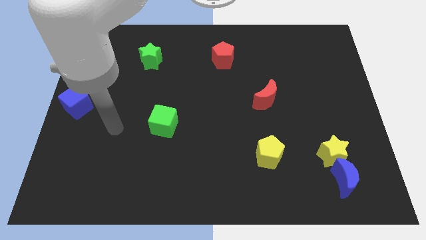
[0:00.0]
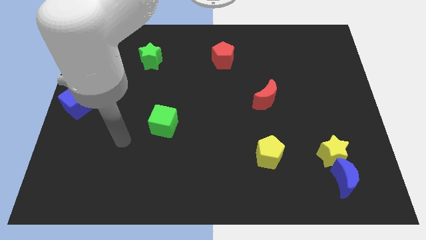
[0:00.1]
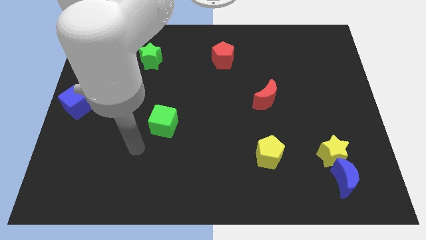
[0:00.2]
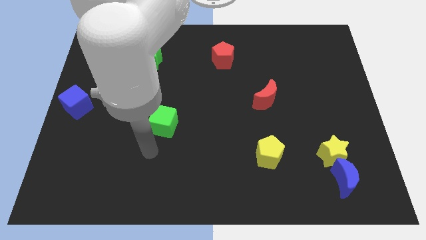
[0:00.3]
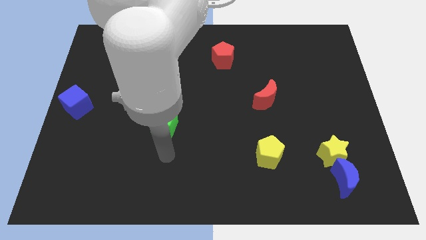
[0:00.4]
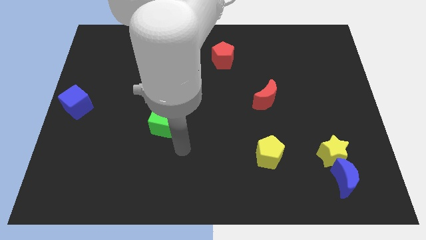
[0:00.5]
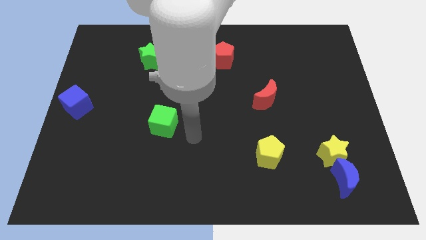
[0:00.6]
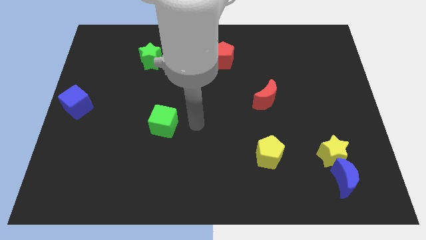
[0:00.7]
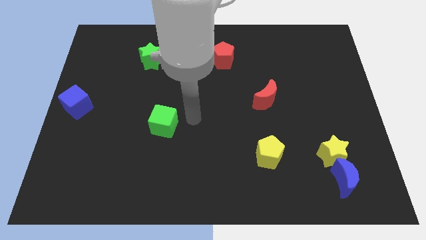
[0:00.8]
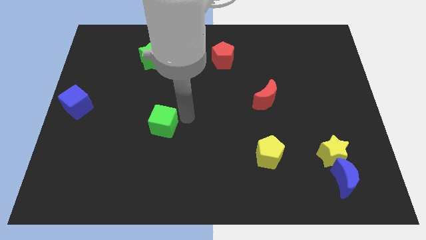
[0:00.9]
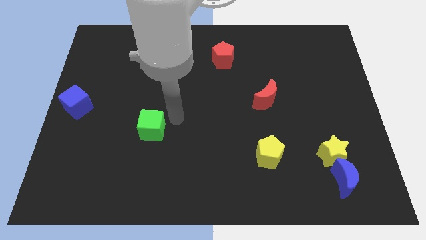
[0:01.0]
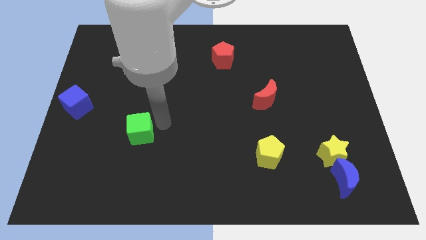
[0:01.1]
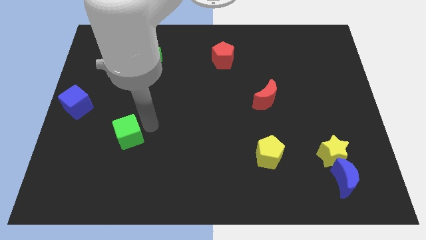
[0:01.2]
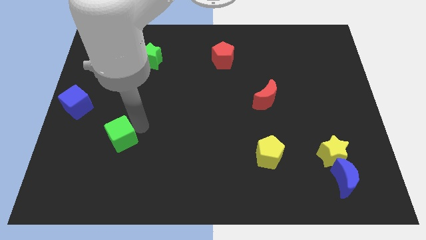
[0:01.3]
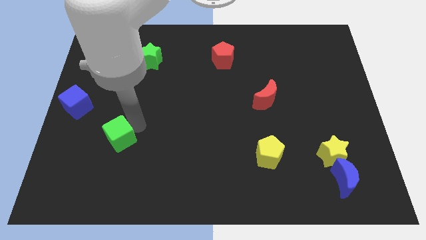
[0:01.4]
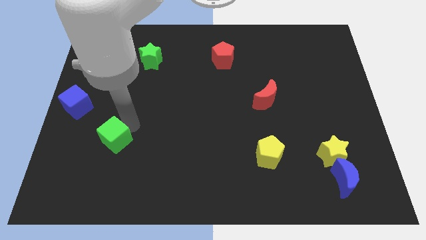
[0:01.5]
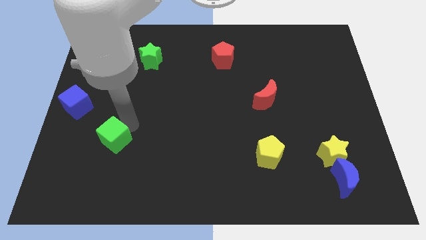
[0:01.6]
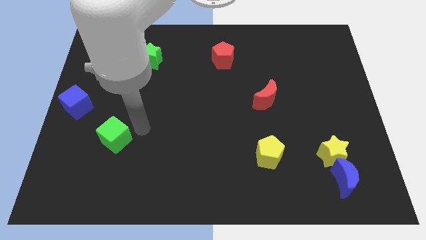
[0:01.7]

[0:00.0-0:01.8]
move the green cube diagonally top left to the green star

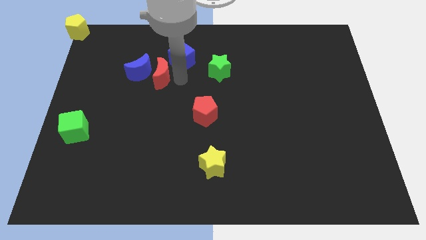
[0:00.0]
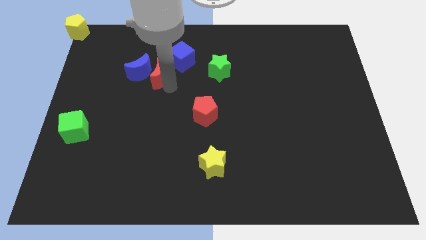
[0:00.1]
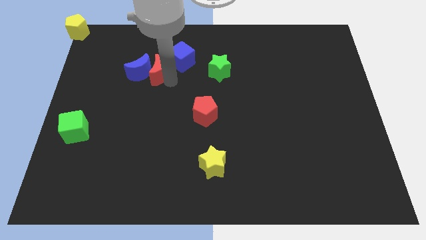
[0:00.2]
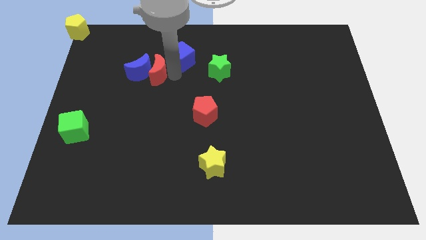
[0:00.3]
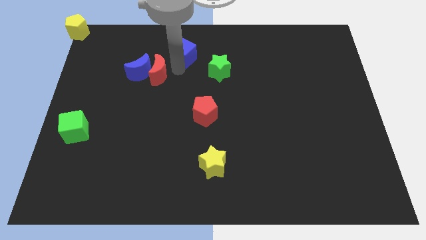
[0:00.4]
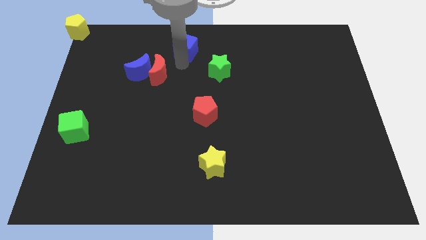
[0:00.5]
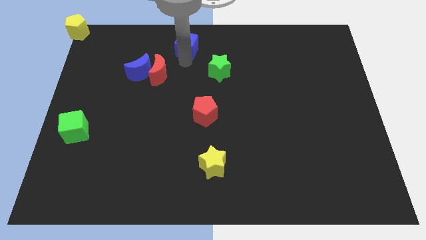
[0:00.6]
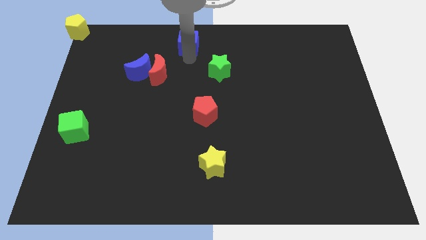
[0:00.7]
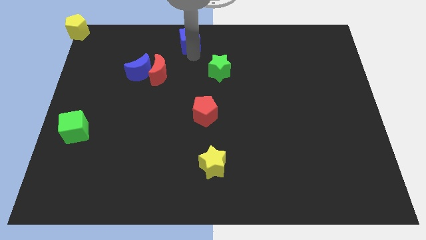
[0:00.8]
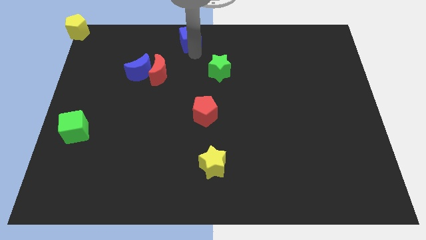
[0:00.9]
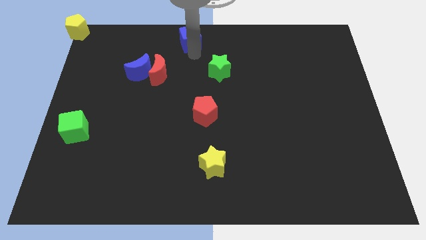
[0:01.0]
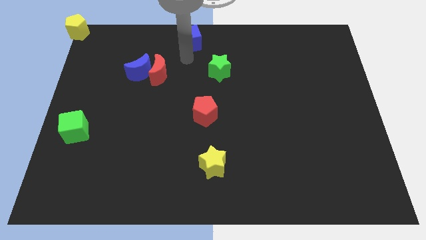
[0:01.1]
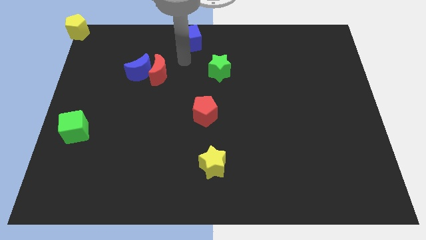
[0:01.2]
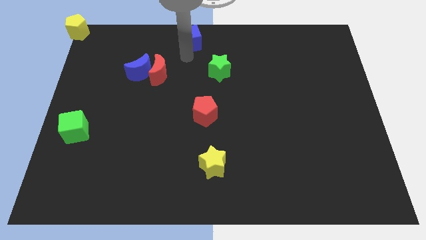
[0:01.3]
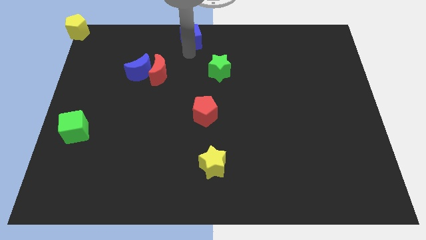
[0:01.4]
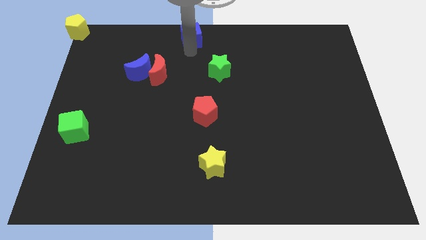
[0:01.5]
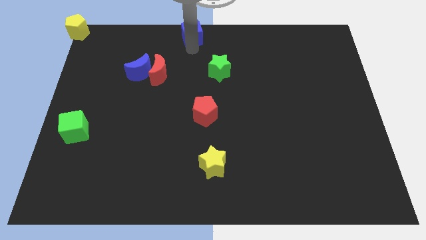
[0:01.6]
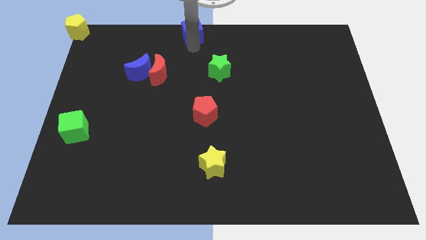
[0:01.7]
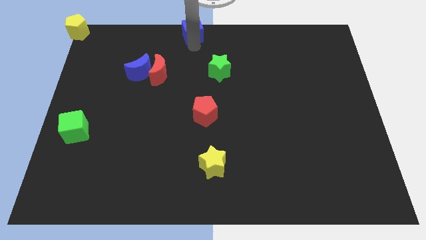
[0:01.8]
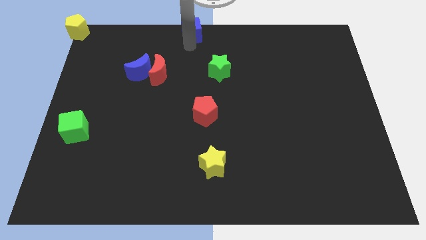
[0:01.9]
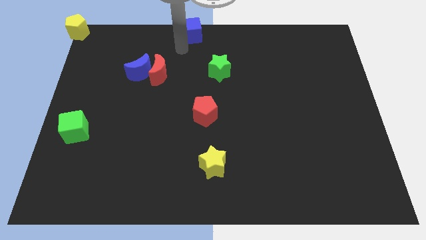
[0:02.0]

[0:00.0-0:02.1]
place the blue cube at the top center of the board

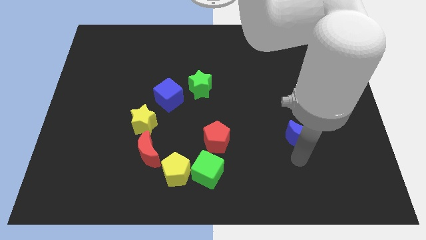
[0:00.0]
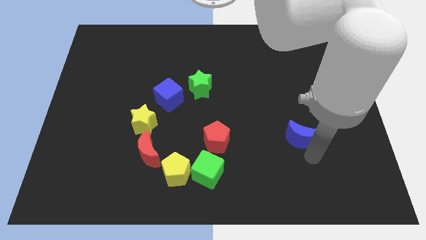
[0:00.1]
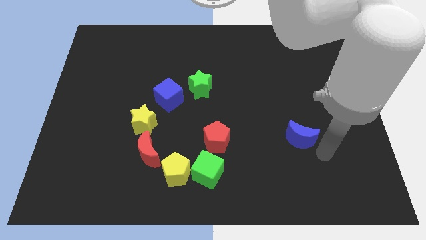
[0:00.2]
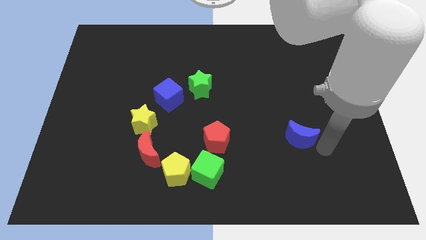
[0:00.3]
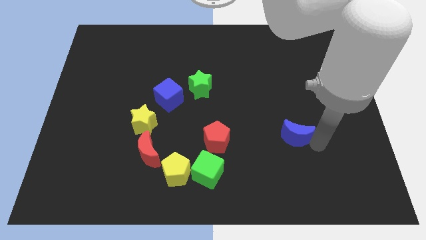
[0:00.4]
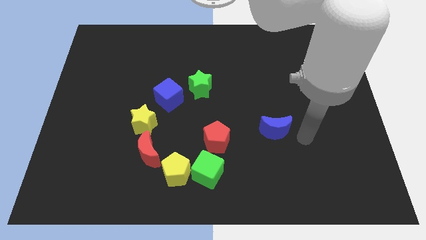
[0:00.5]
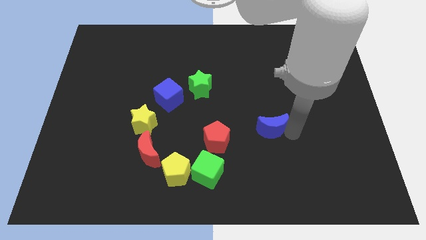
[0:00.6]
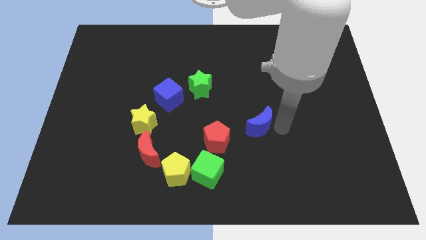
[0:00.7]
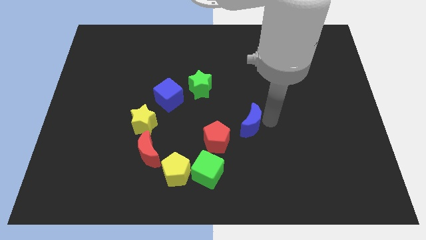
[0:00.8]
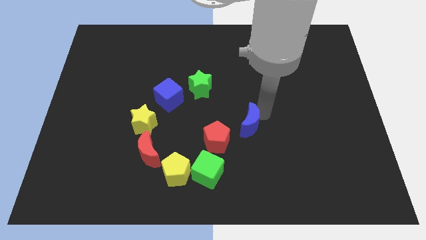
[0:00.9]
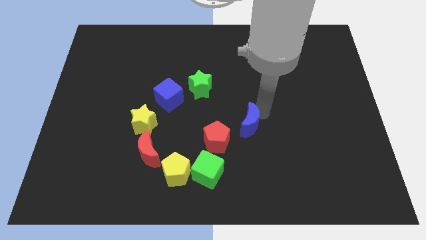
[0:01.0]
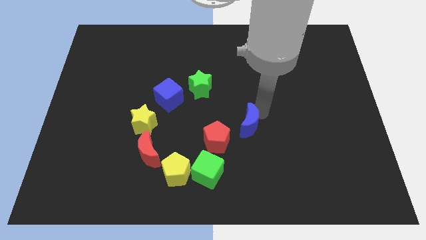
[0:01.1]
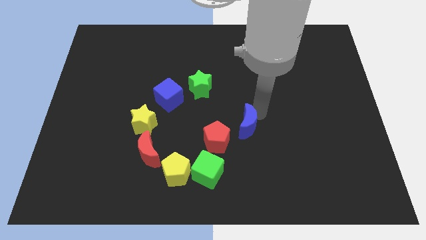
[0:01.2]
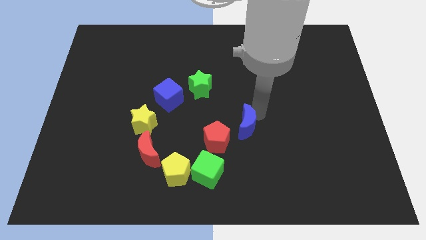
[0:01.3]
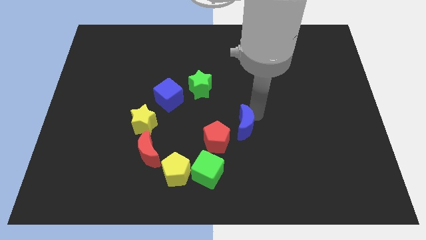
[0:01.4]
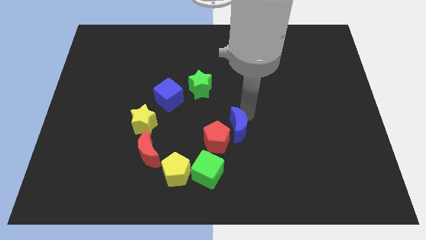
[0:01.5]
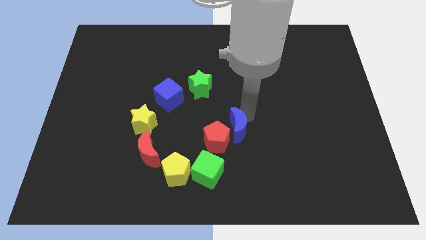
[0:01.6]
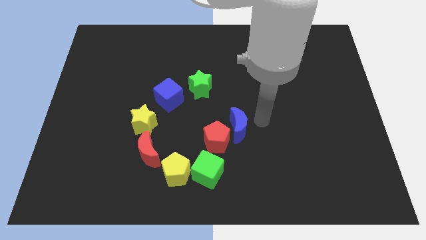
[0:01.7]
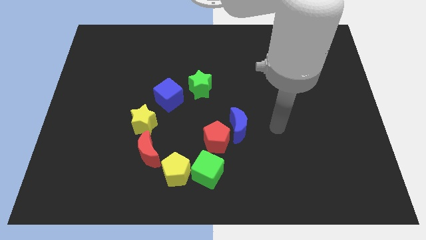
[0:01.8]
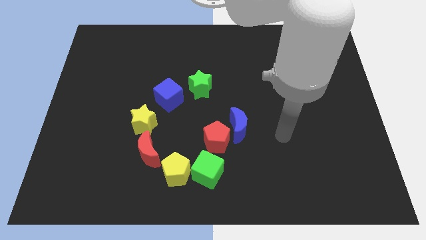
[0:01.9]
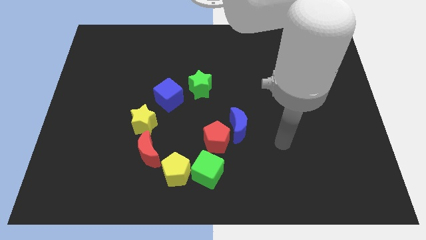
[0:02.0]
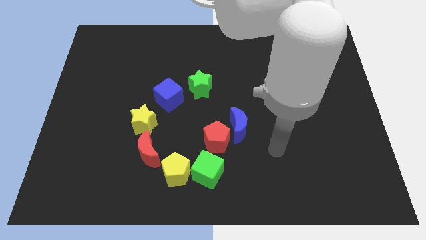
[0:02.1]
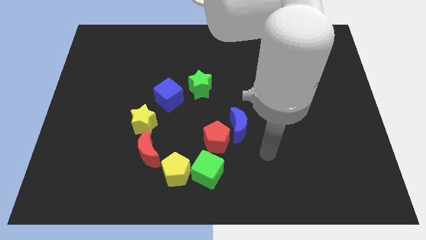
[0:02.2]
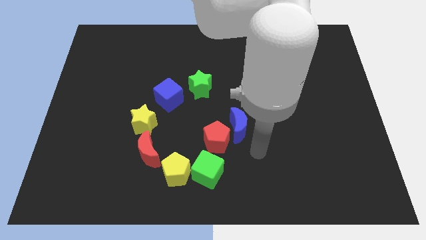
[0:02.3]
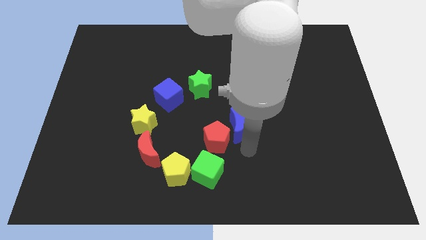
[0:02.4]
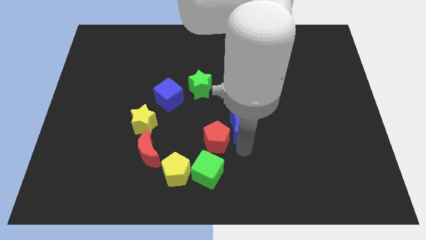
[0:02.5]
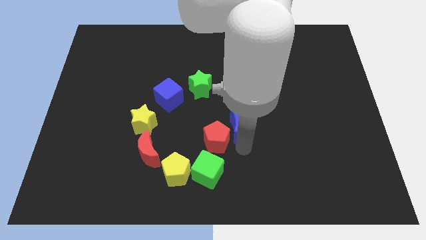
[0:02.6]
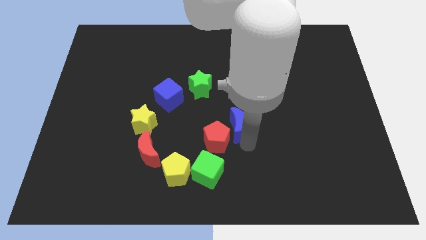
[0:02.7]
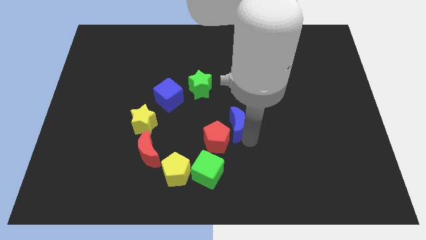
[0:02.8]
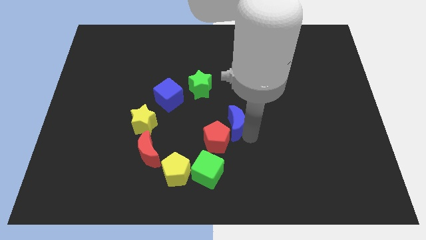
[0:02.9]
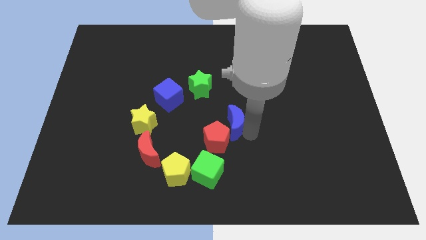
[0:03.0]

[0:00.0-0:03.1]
place the blue crescent towards the top right side of the red pentagon

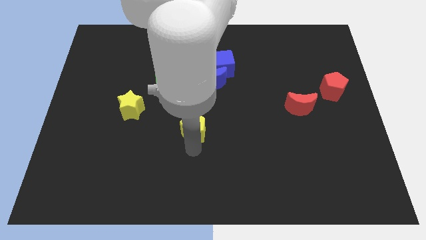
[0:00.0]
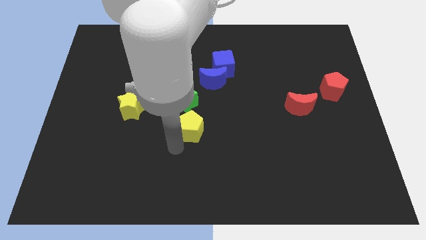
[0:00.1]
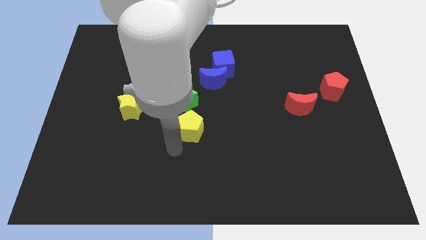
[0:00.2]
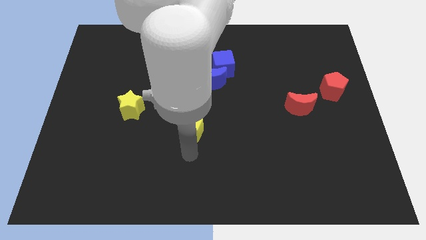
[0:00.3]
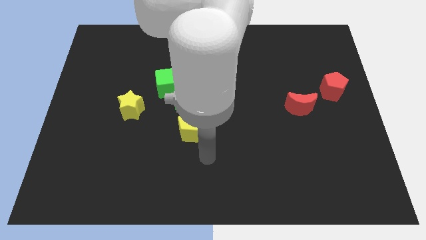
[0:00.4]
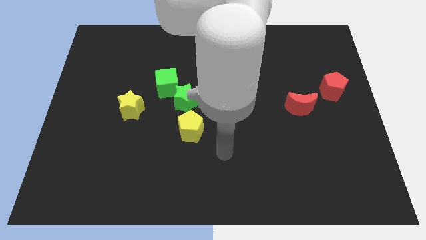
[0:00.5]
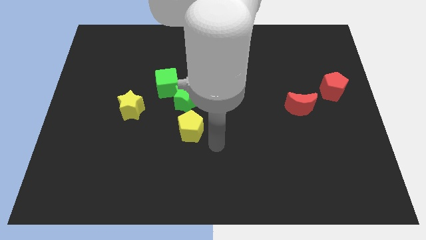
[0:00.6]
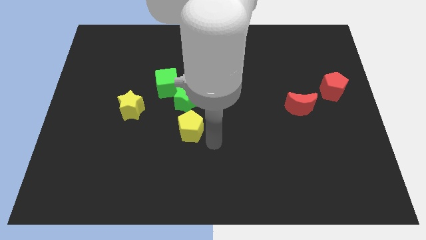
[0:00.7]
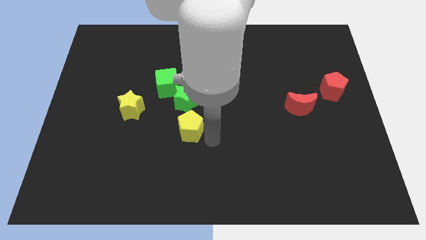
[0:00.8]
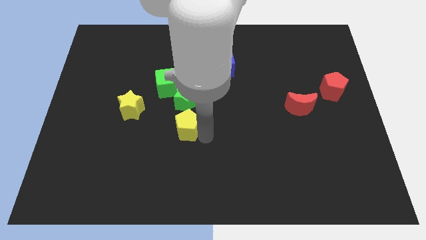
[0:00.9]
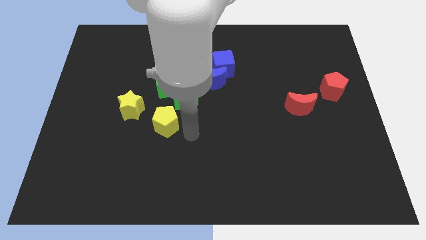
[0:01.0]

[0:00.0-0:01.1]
move yellow pentagon towards the bottom left of the green star

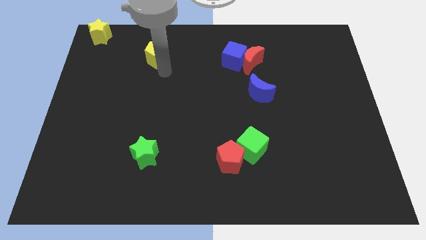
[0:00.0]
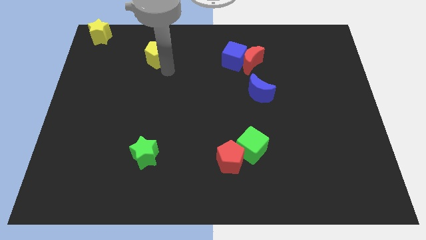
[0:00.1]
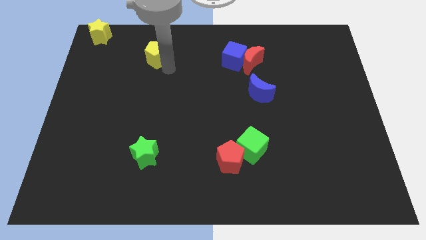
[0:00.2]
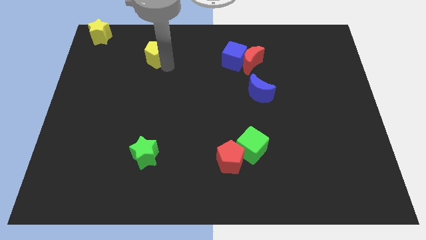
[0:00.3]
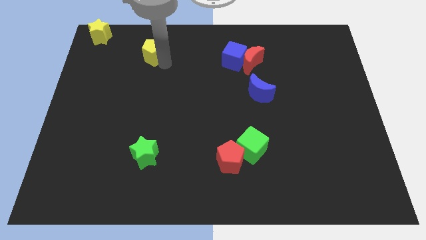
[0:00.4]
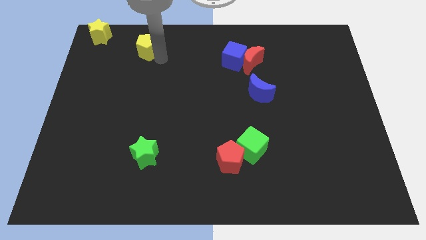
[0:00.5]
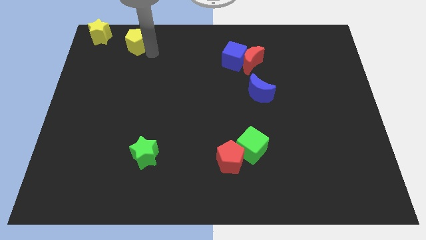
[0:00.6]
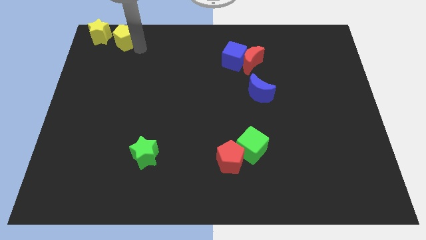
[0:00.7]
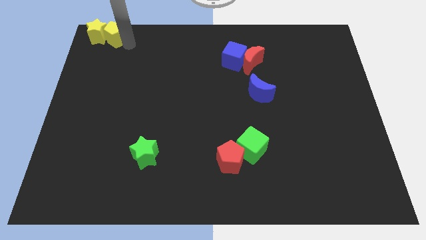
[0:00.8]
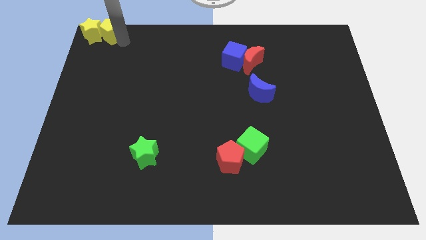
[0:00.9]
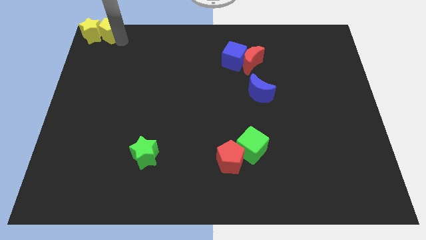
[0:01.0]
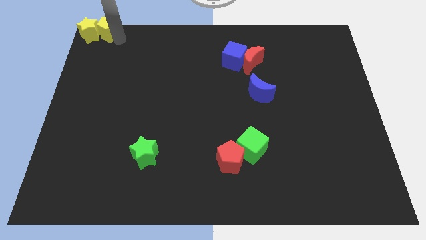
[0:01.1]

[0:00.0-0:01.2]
place the yellow pentagon to the right side of the yellow star
